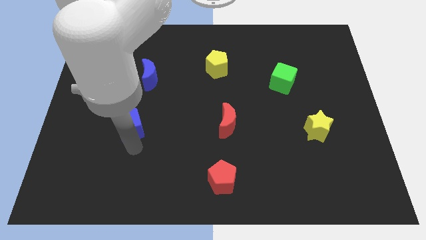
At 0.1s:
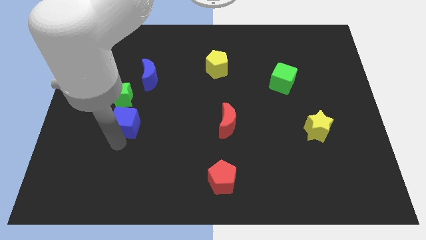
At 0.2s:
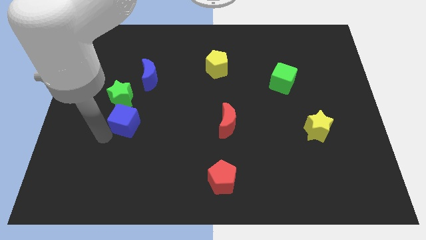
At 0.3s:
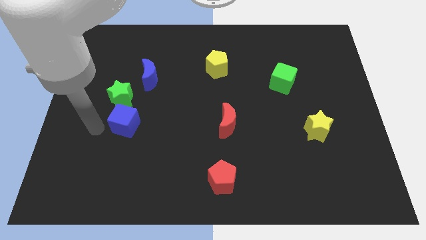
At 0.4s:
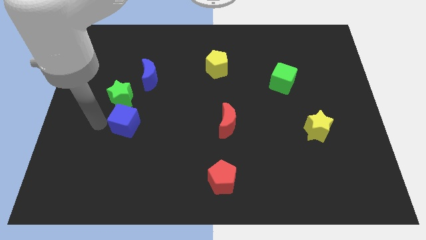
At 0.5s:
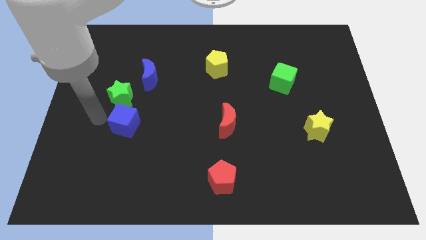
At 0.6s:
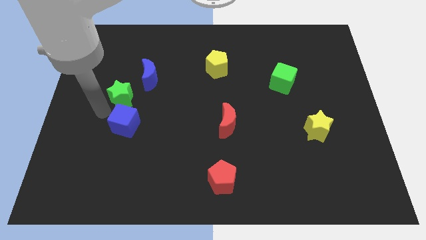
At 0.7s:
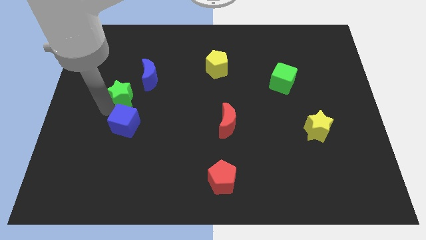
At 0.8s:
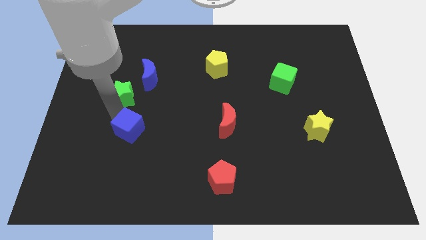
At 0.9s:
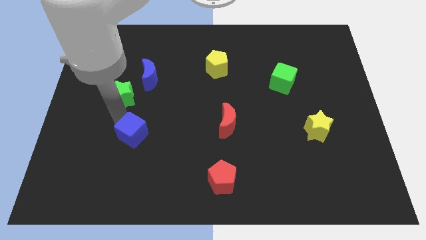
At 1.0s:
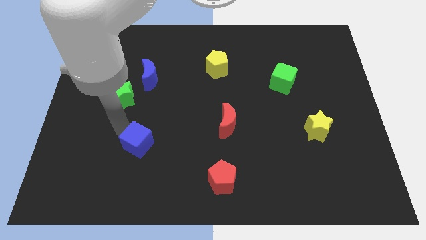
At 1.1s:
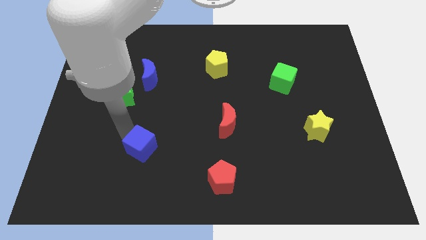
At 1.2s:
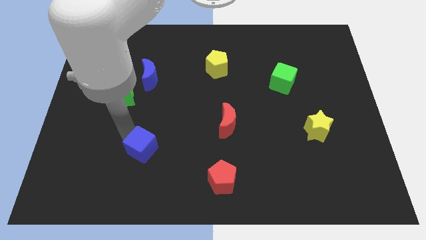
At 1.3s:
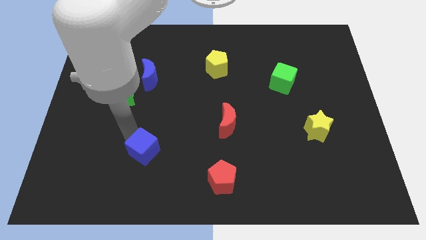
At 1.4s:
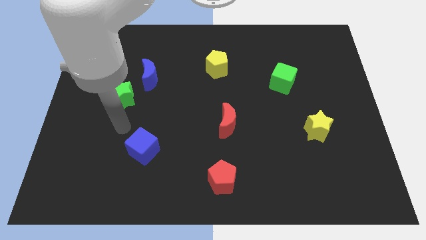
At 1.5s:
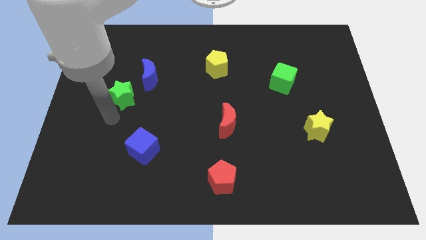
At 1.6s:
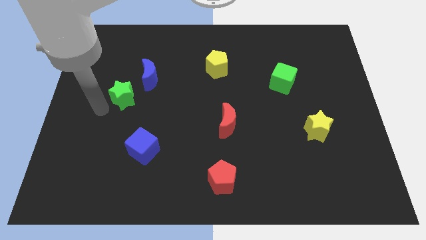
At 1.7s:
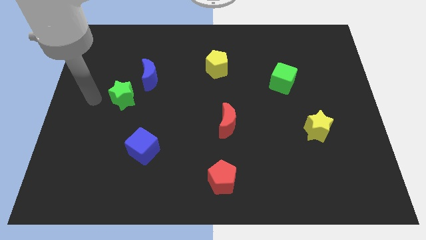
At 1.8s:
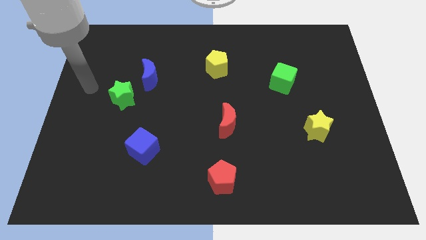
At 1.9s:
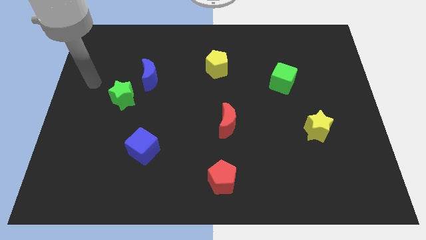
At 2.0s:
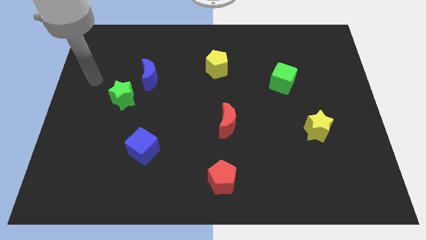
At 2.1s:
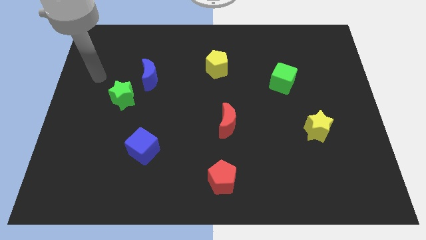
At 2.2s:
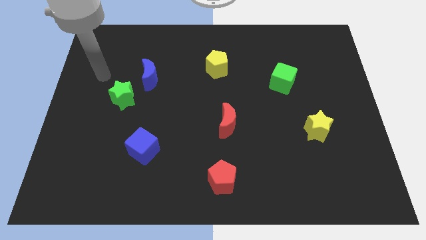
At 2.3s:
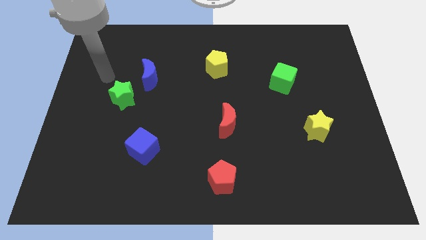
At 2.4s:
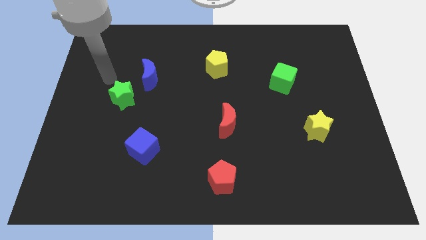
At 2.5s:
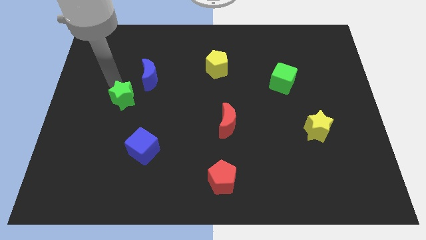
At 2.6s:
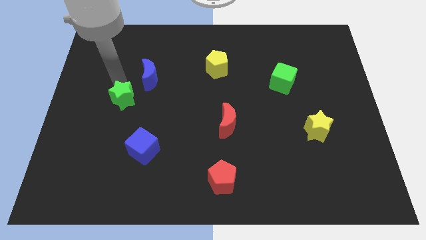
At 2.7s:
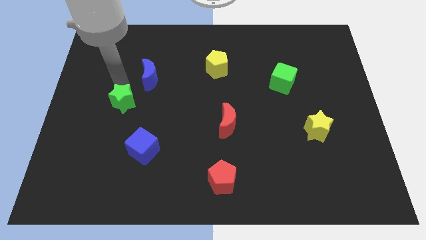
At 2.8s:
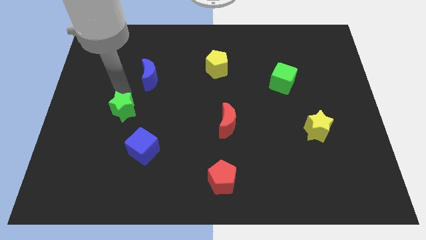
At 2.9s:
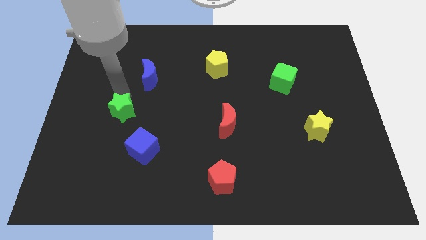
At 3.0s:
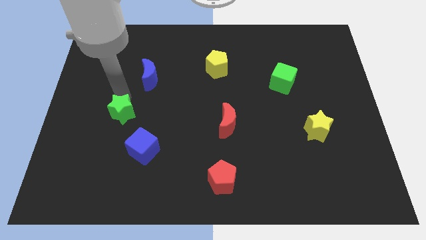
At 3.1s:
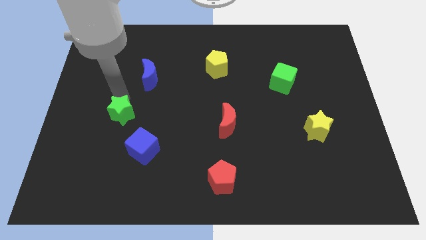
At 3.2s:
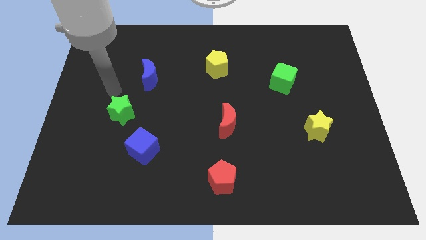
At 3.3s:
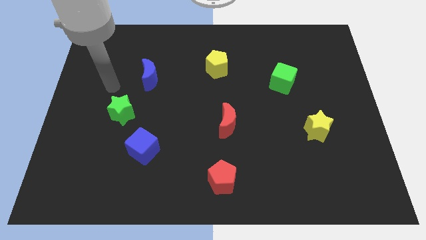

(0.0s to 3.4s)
slightly move the blue cube towards the bottom

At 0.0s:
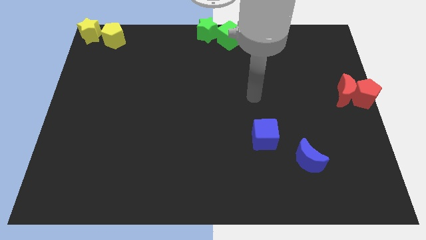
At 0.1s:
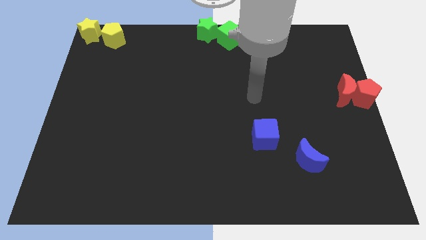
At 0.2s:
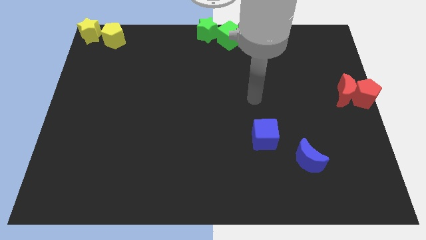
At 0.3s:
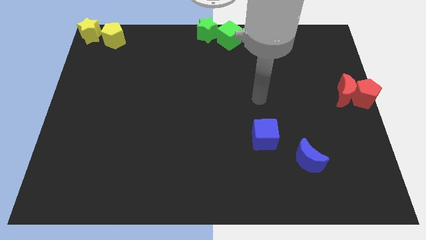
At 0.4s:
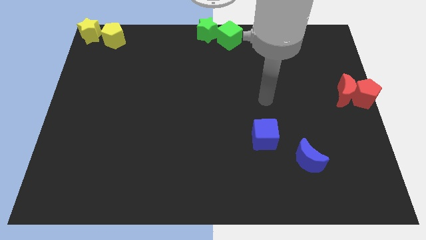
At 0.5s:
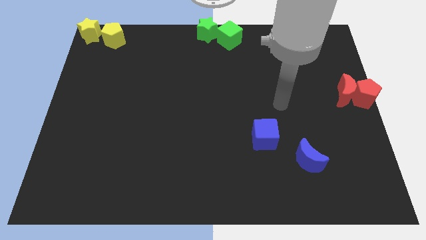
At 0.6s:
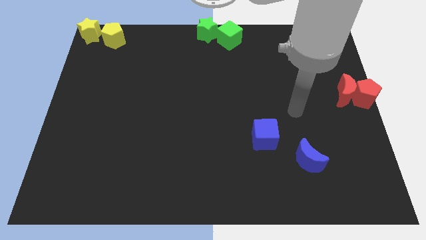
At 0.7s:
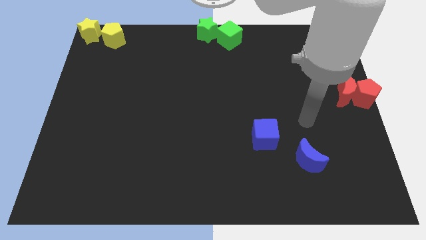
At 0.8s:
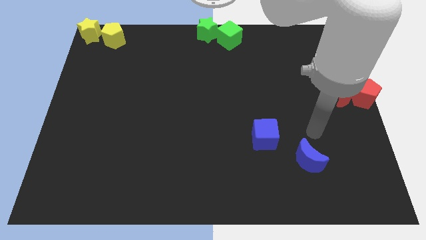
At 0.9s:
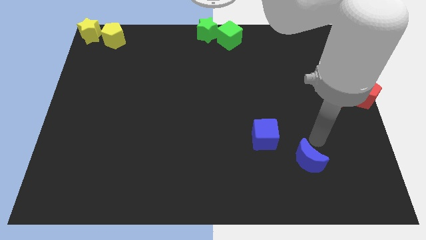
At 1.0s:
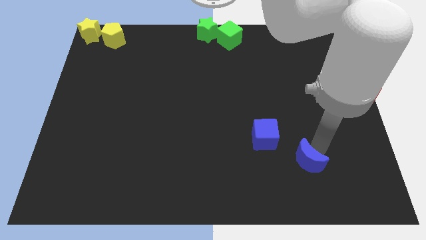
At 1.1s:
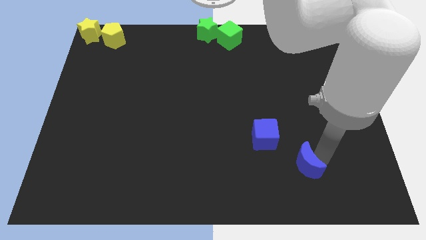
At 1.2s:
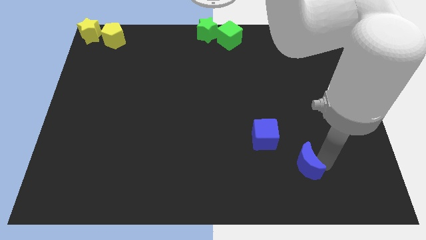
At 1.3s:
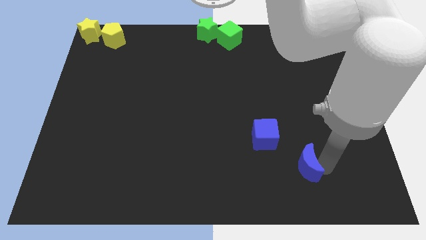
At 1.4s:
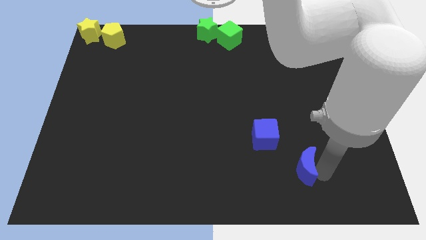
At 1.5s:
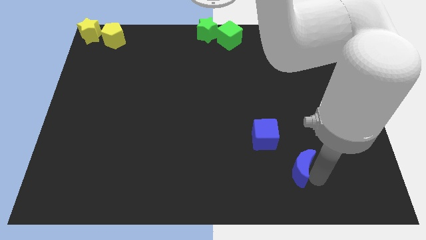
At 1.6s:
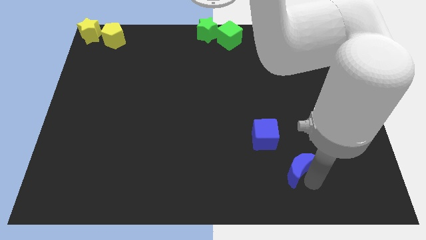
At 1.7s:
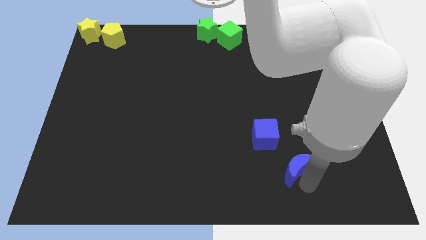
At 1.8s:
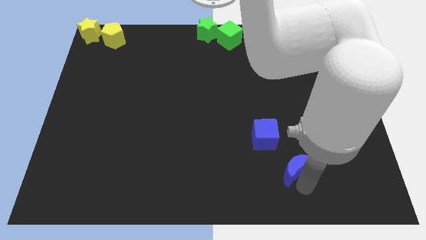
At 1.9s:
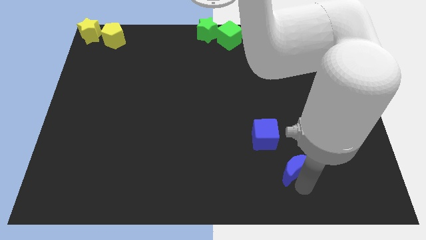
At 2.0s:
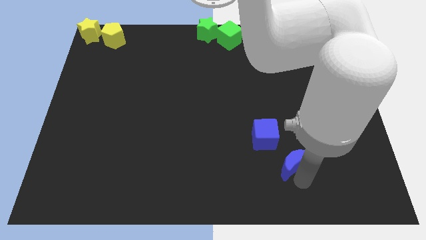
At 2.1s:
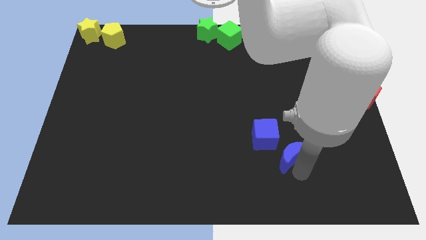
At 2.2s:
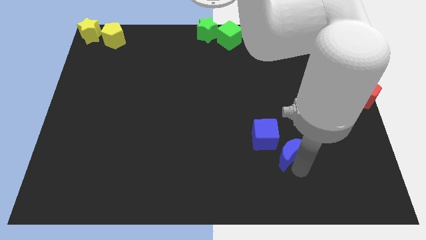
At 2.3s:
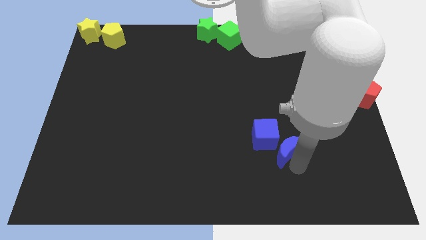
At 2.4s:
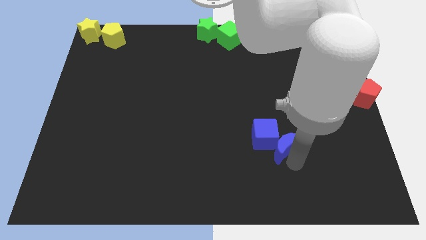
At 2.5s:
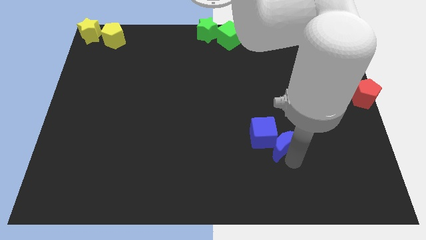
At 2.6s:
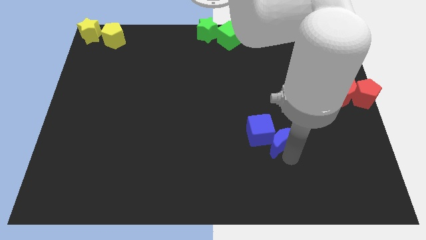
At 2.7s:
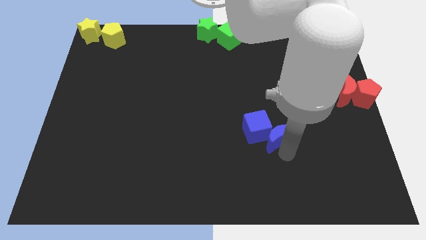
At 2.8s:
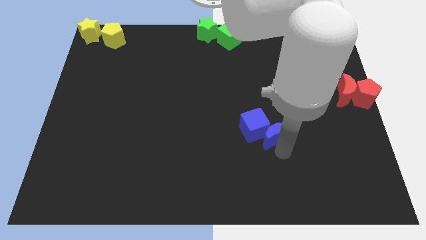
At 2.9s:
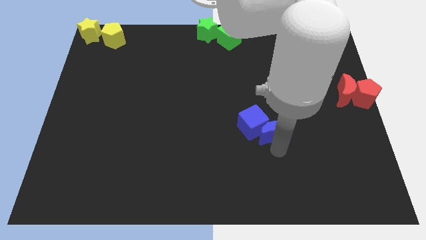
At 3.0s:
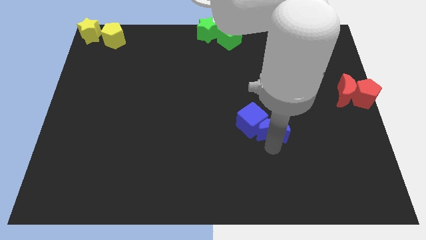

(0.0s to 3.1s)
slide blue moon into blue cube

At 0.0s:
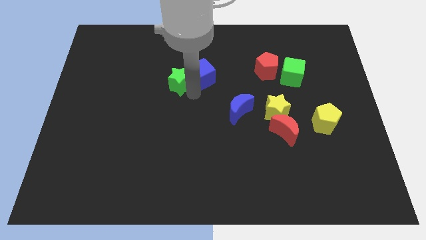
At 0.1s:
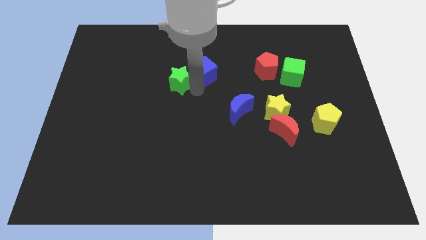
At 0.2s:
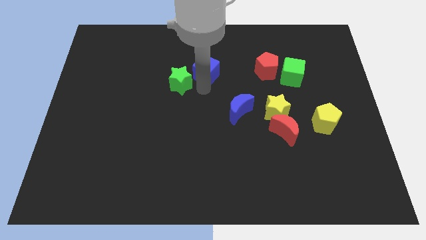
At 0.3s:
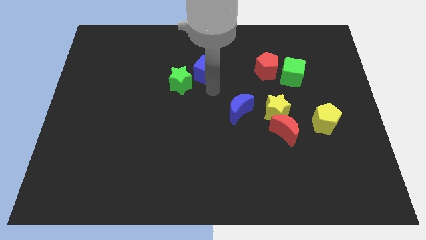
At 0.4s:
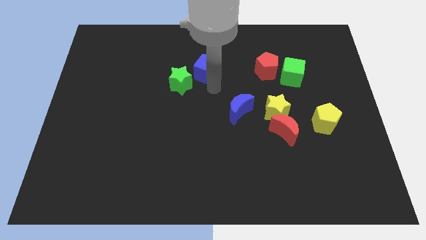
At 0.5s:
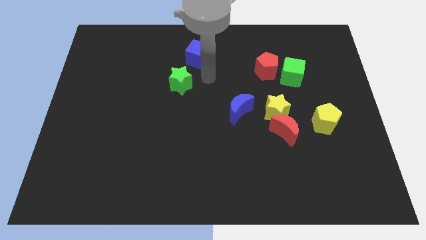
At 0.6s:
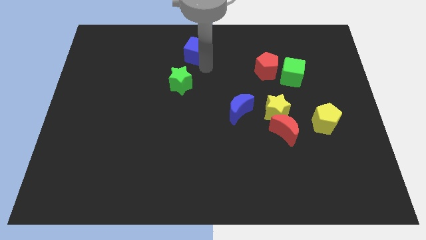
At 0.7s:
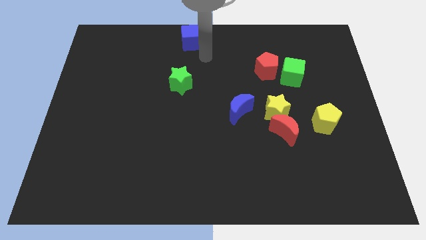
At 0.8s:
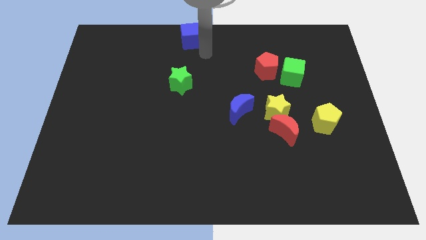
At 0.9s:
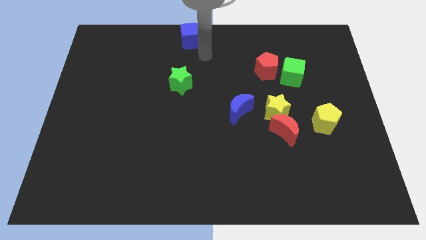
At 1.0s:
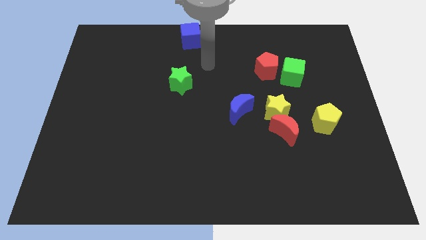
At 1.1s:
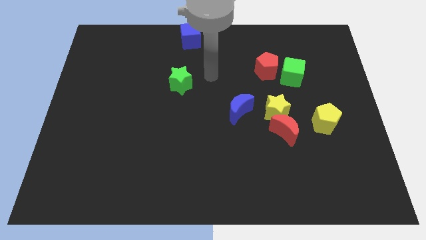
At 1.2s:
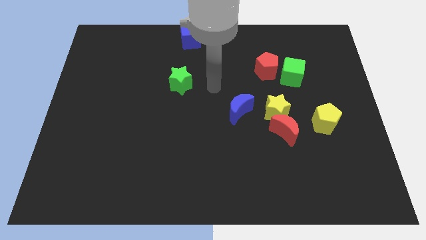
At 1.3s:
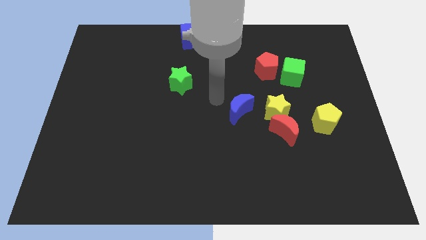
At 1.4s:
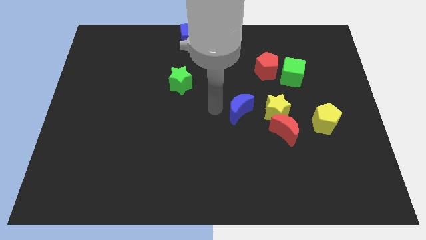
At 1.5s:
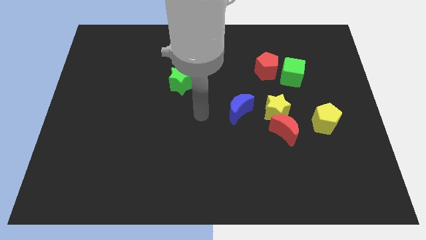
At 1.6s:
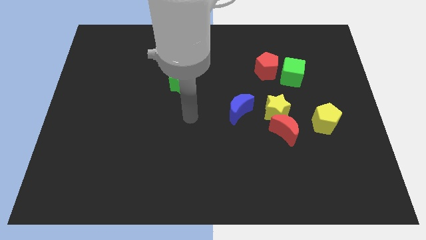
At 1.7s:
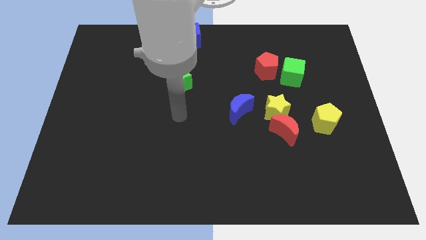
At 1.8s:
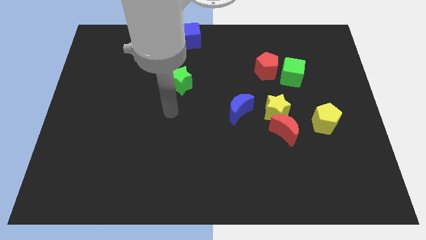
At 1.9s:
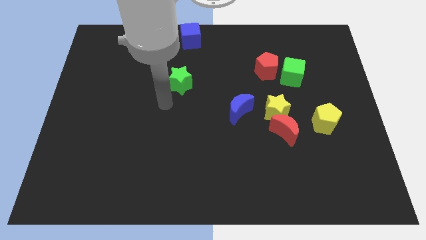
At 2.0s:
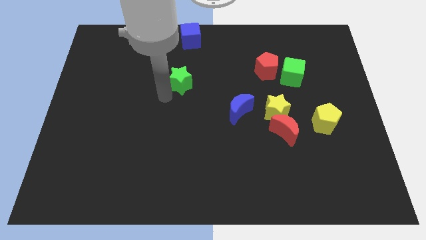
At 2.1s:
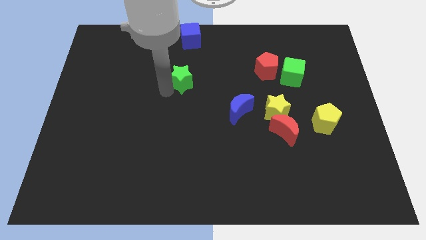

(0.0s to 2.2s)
place the blue cube at the top center

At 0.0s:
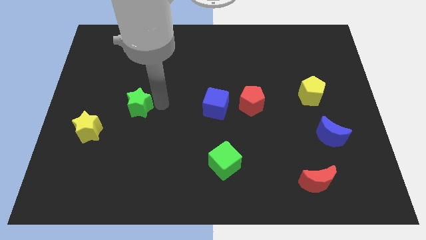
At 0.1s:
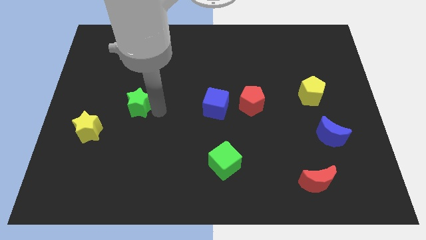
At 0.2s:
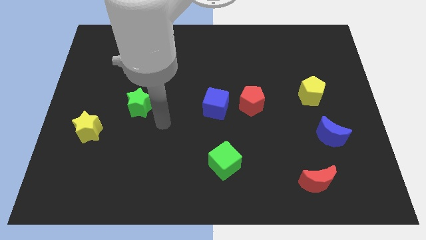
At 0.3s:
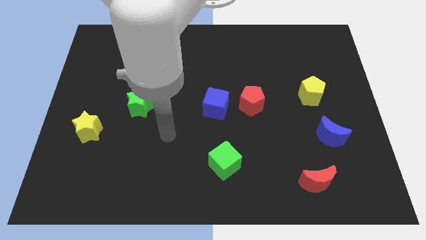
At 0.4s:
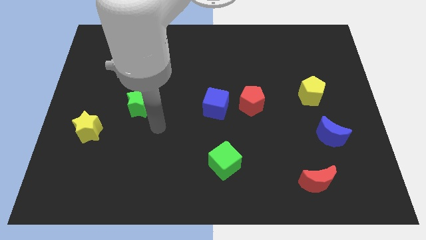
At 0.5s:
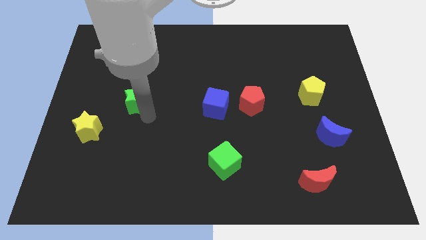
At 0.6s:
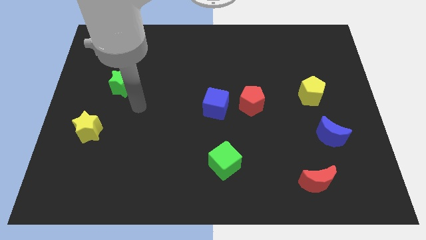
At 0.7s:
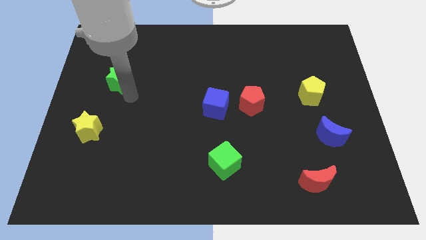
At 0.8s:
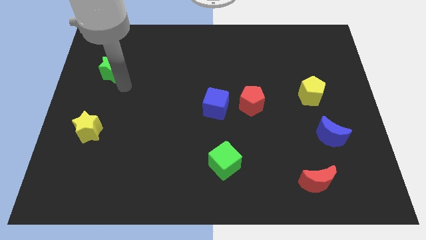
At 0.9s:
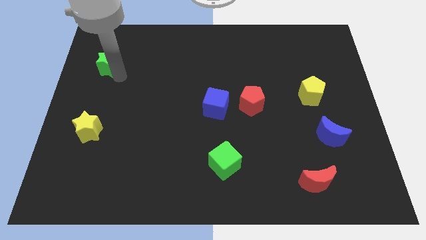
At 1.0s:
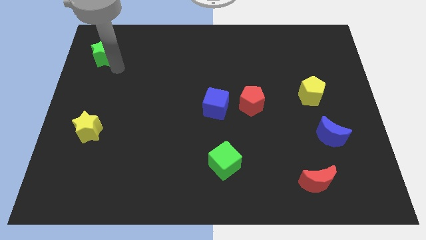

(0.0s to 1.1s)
move green star diagonally upwards
